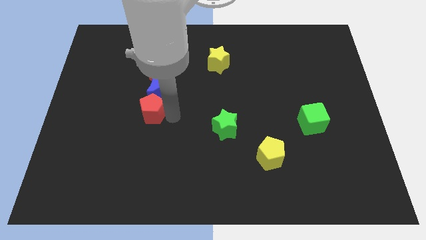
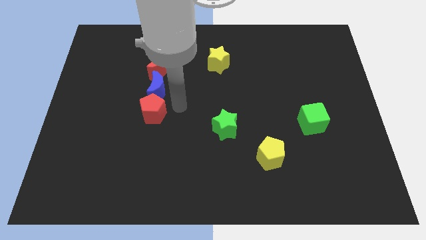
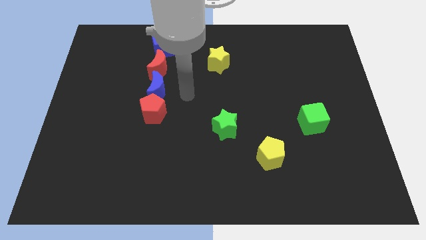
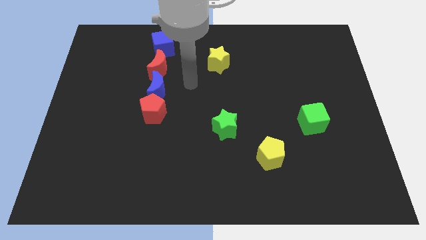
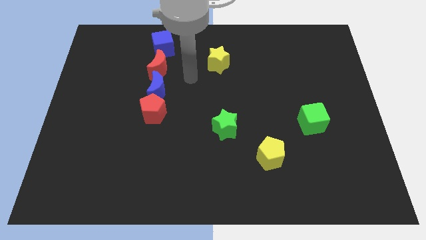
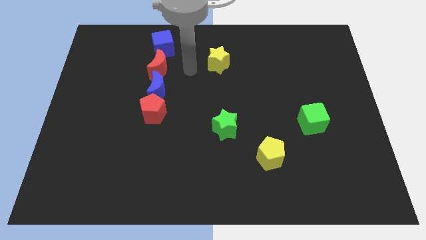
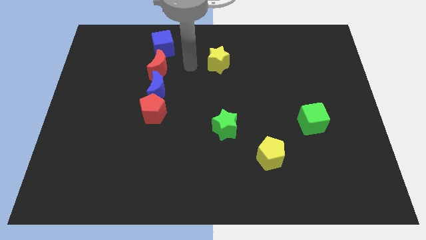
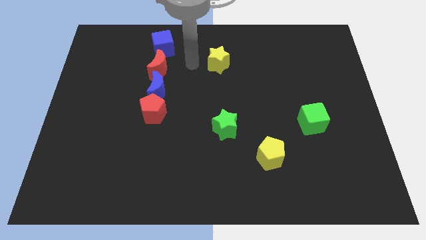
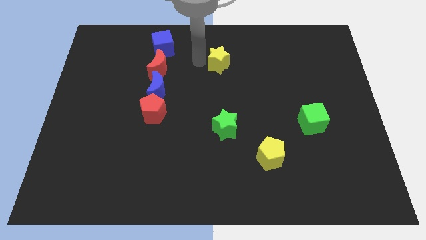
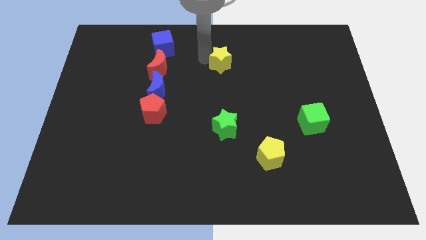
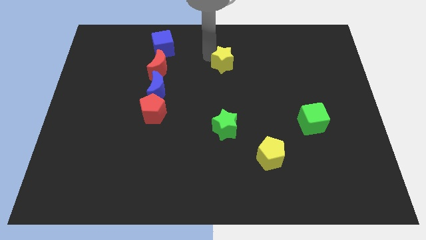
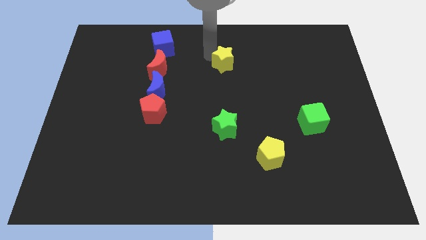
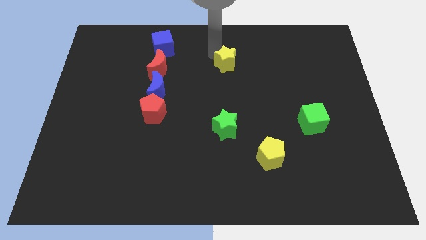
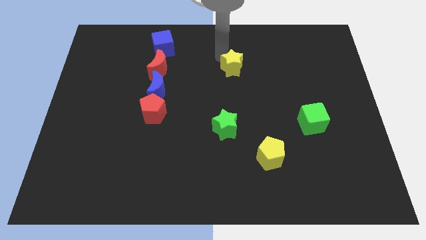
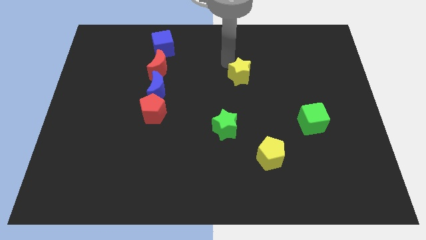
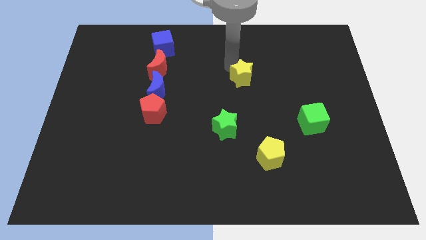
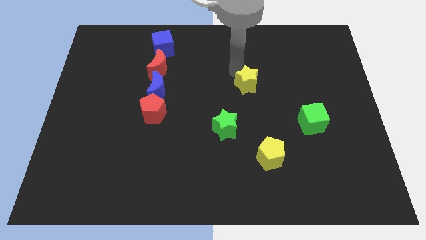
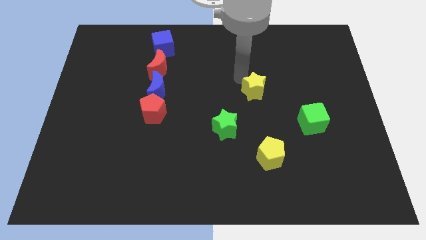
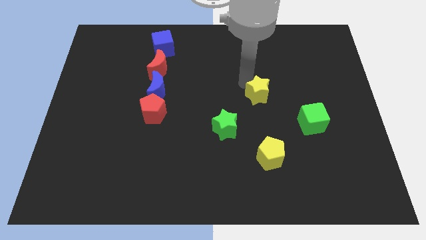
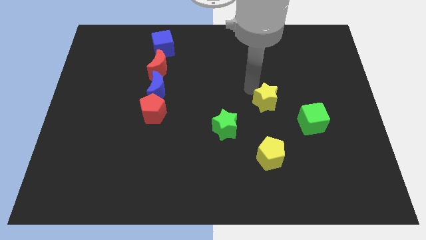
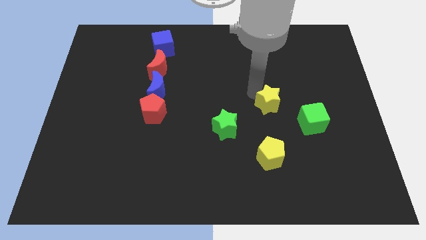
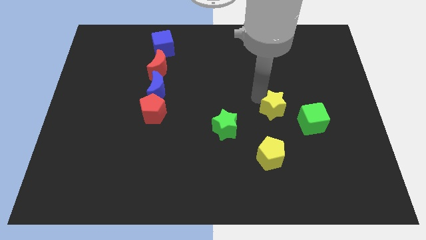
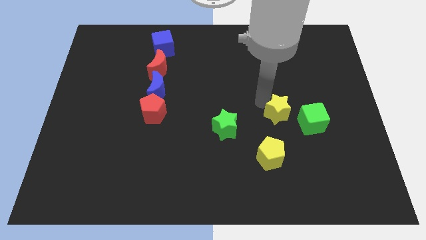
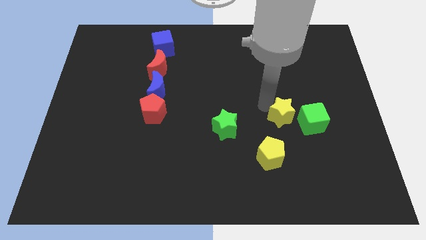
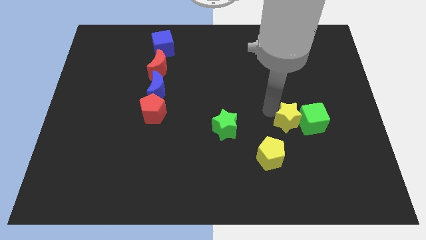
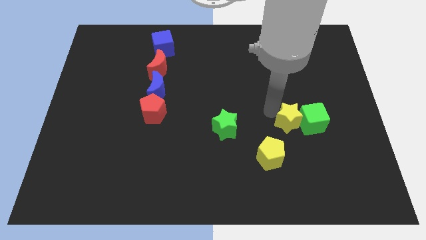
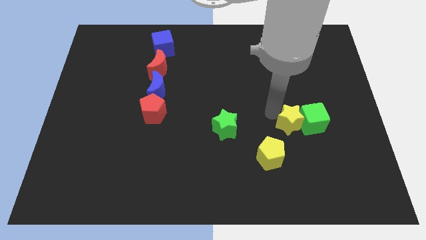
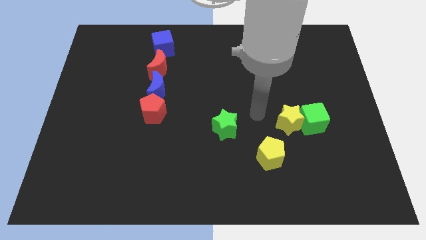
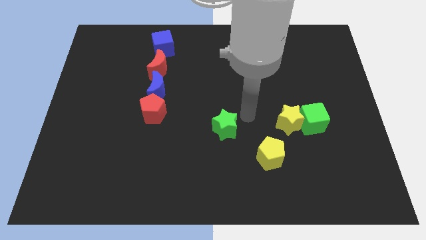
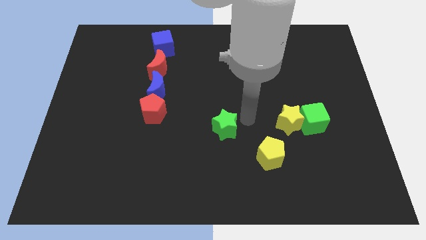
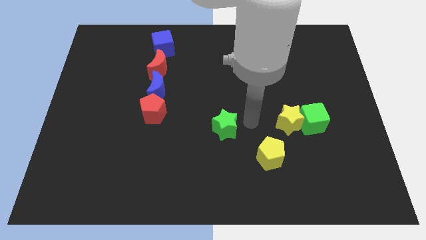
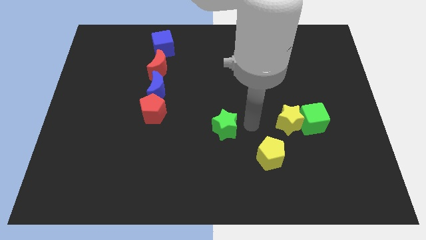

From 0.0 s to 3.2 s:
place the yellow star close to the green cube

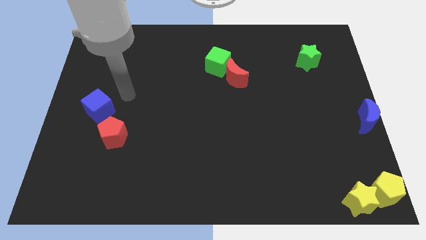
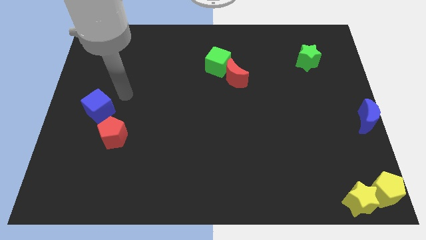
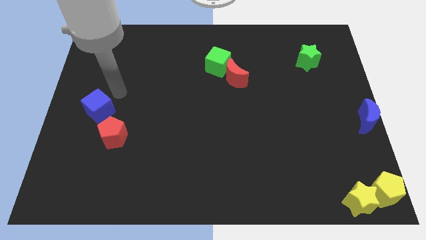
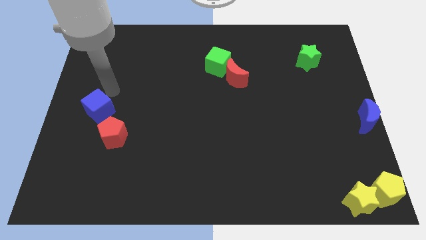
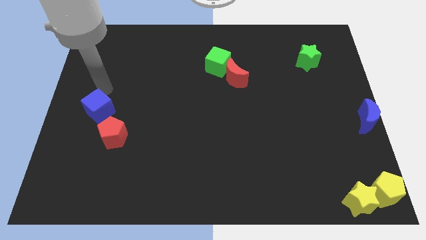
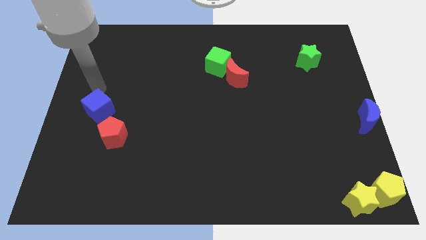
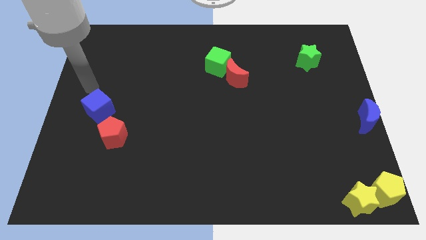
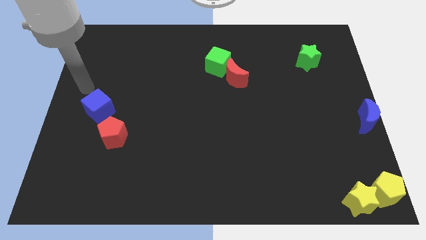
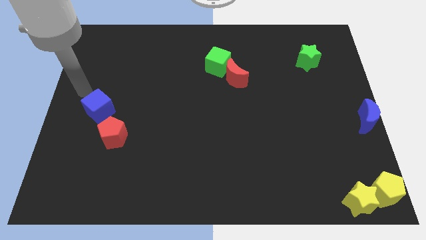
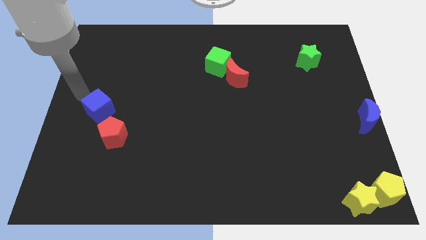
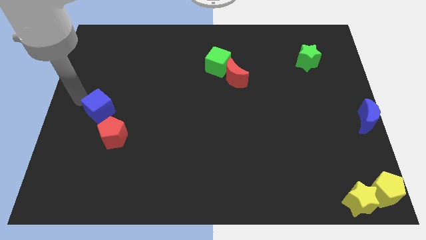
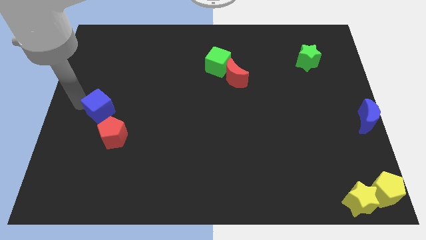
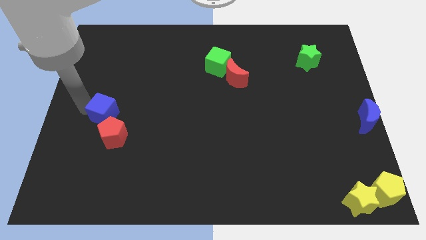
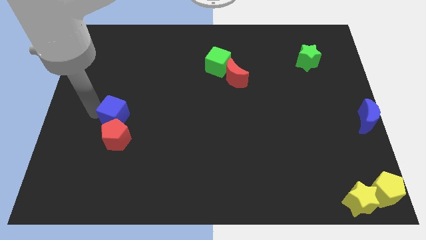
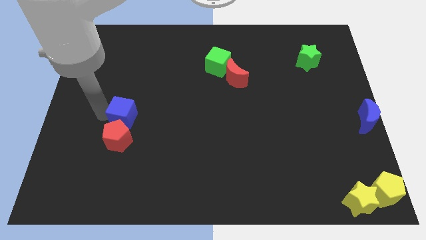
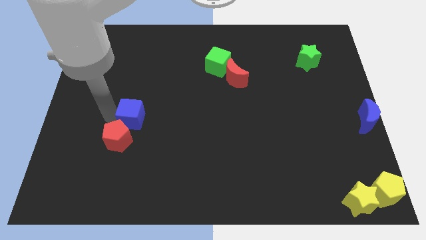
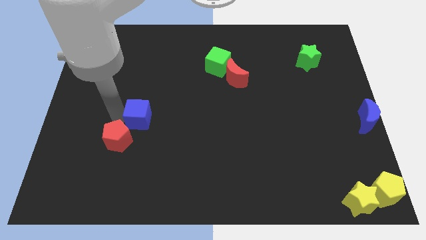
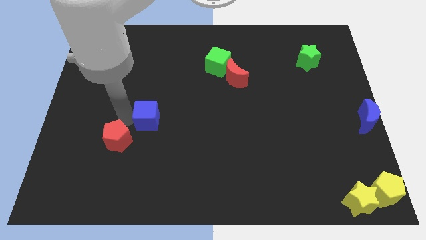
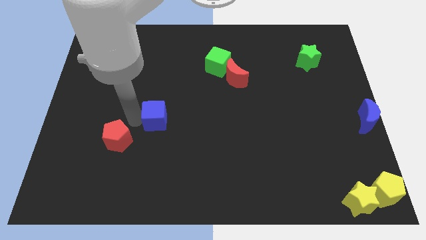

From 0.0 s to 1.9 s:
push the blue cube to the top right of the red pentagon

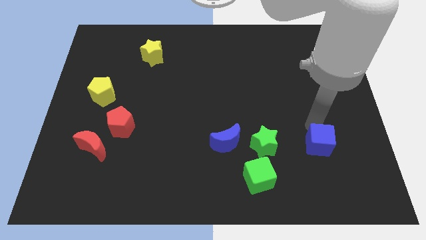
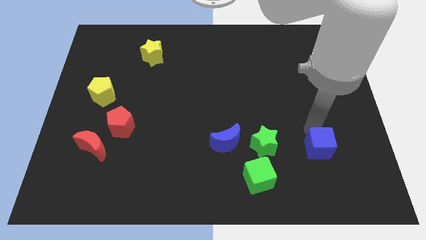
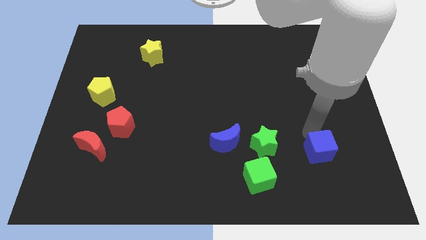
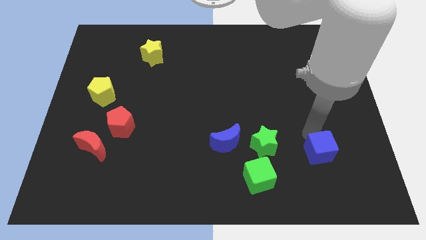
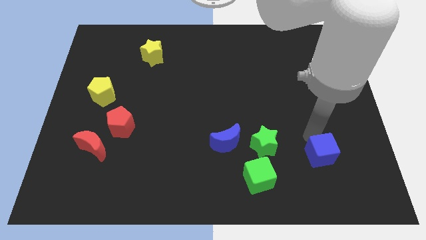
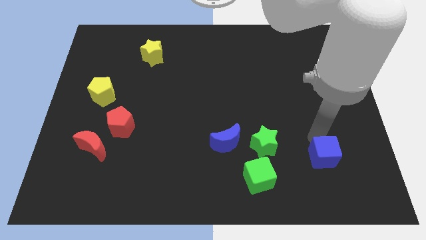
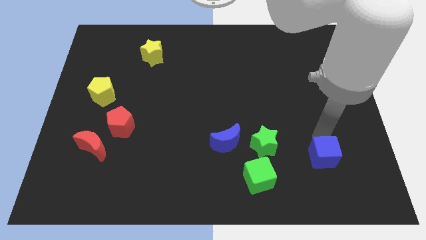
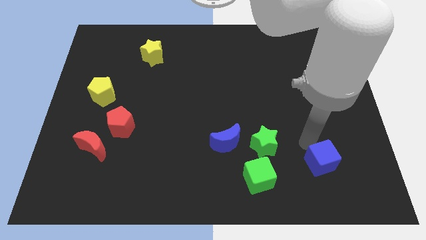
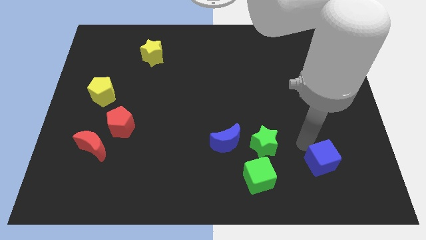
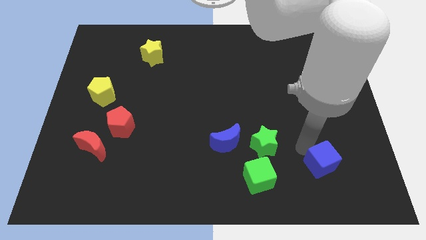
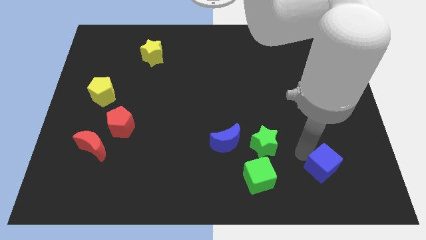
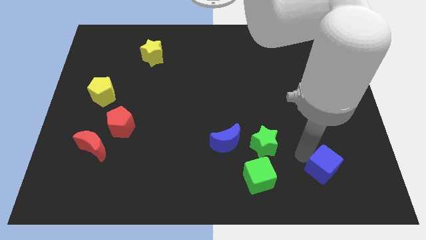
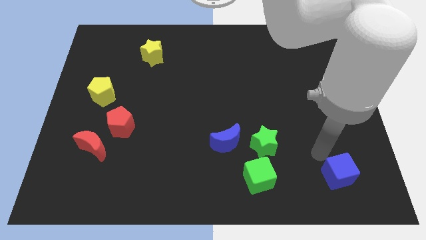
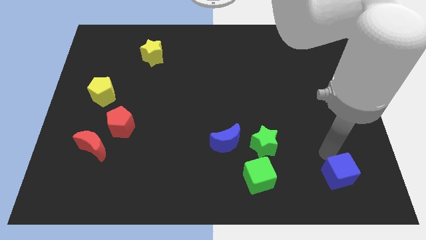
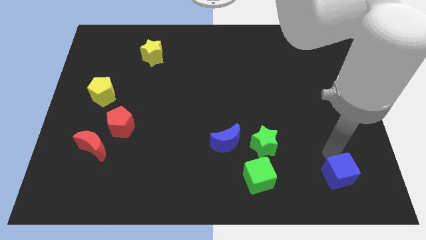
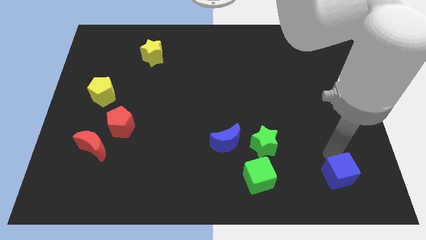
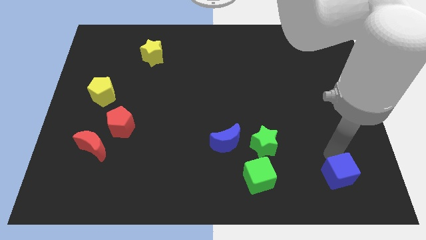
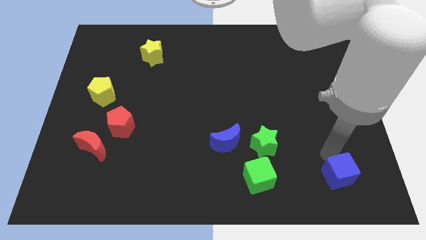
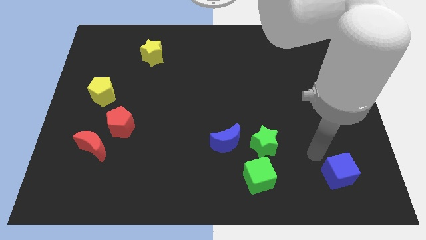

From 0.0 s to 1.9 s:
place the blue cube to the right of the green cube

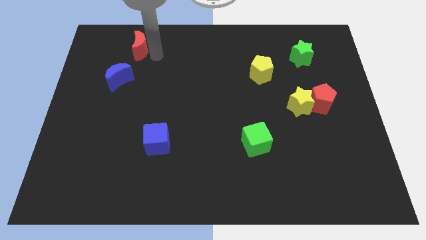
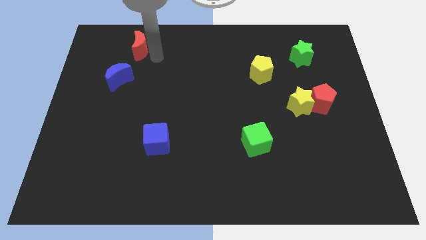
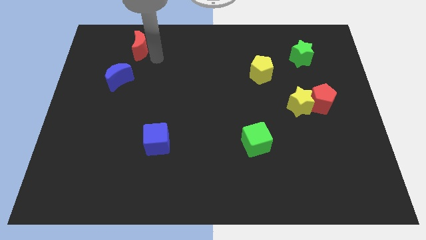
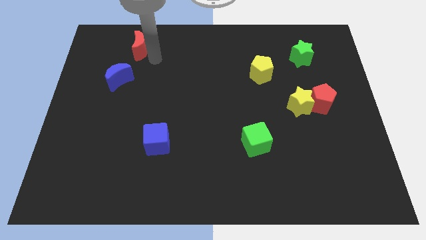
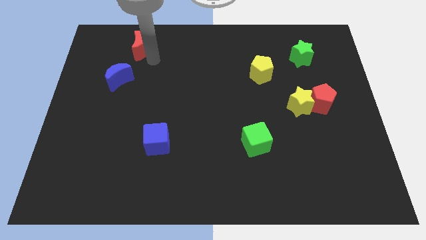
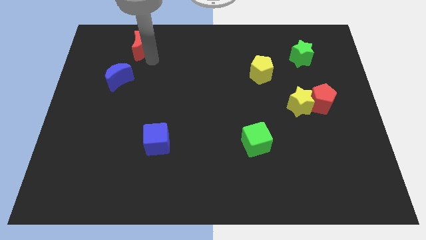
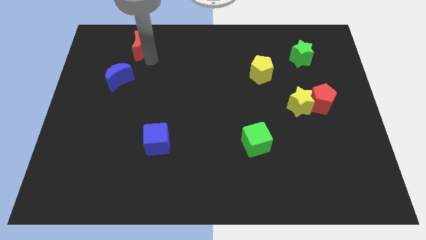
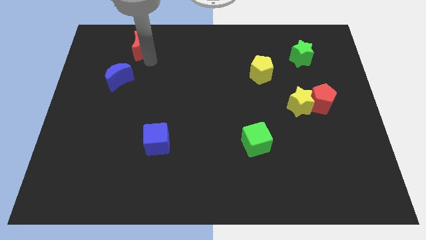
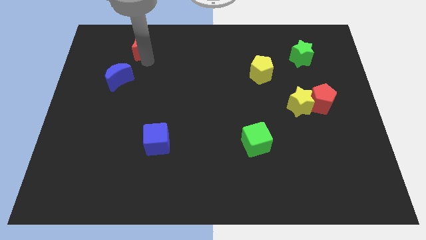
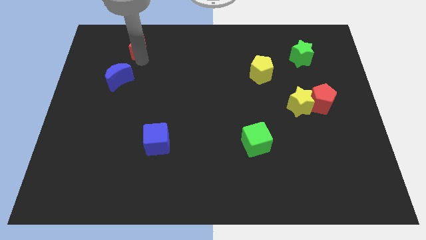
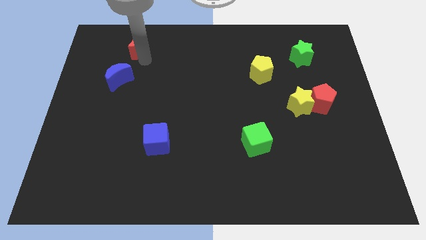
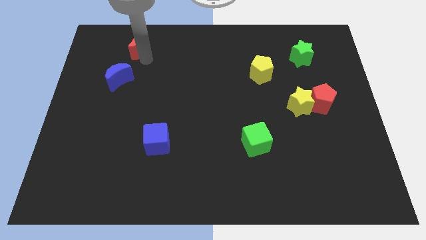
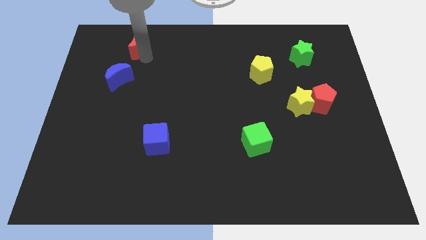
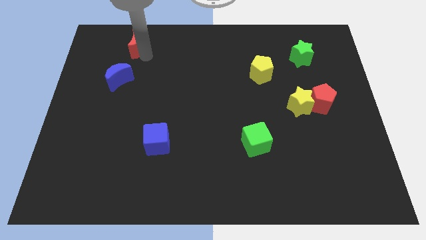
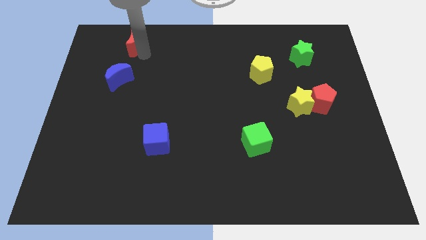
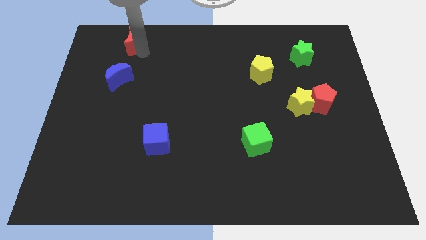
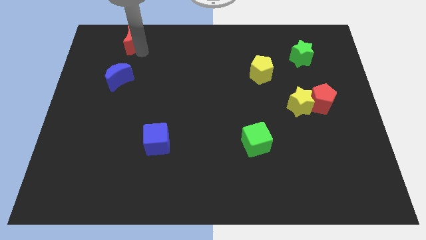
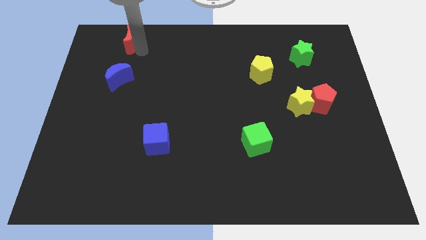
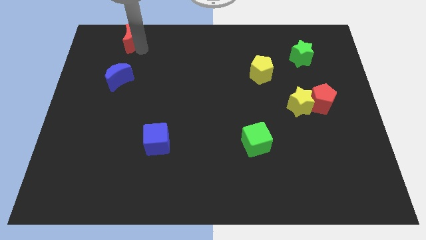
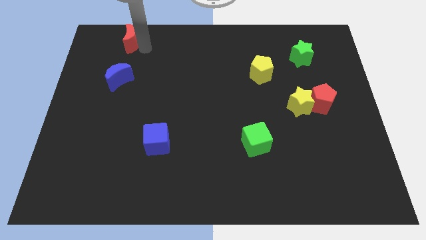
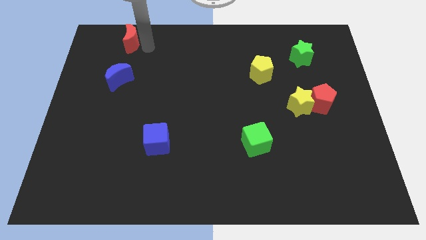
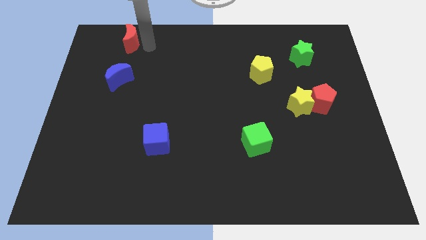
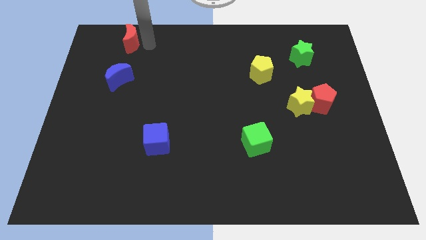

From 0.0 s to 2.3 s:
place the red moon above the blue moon
